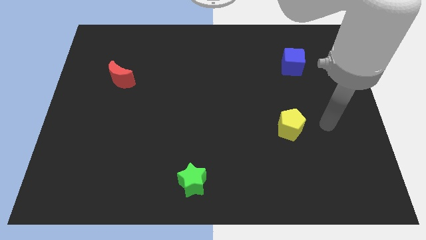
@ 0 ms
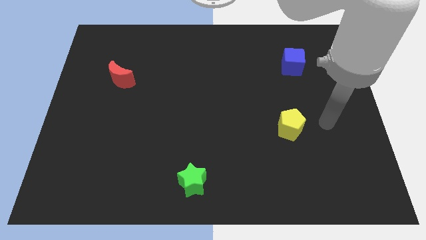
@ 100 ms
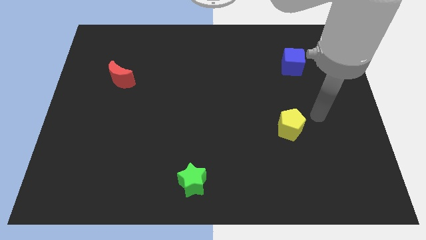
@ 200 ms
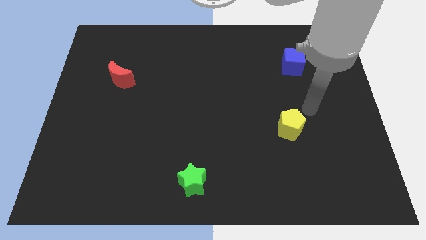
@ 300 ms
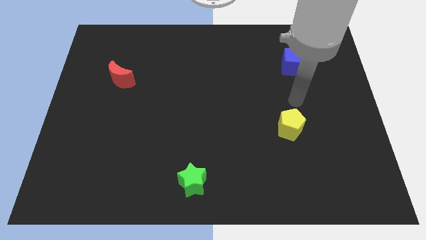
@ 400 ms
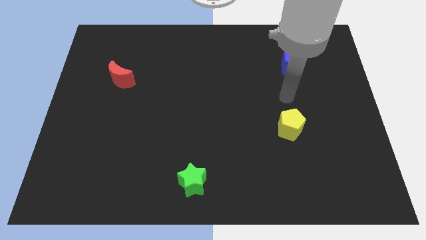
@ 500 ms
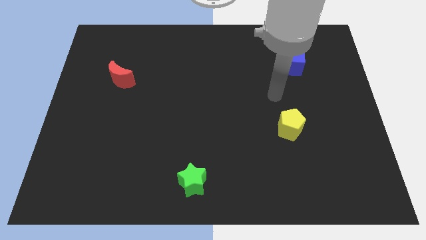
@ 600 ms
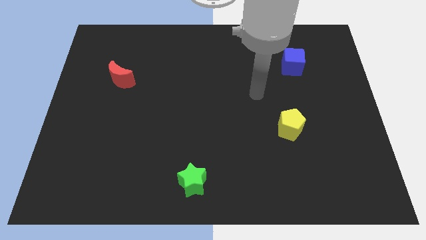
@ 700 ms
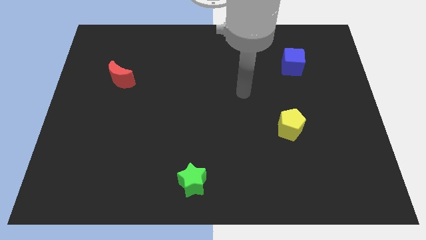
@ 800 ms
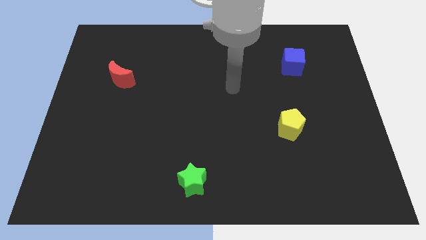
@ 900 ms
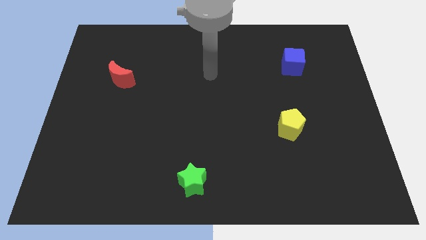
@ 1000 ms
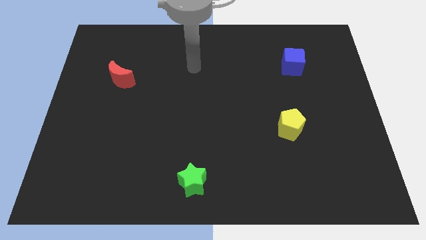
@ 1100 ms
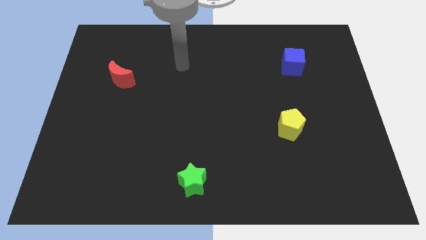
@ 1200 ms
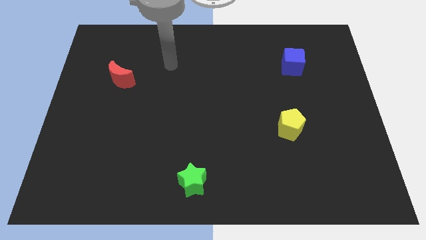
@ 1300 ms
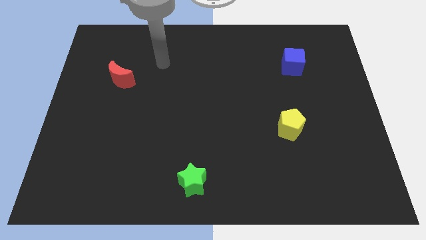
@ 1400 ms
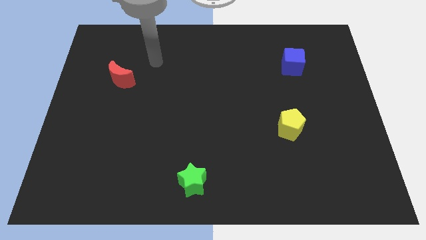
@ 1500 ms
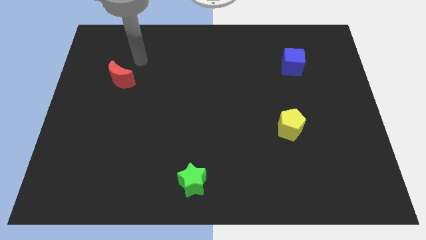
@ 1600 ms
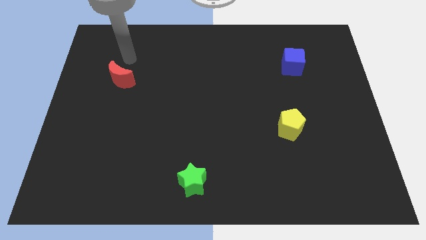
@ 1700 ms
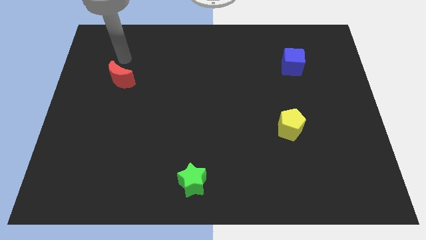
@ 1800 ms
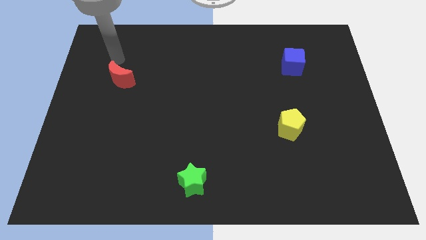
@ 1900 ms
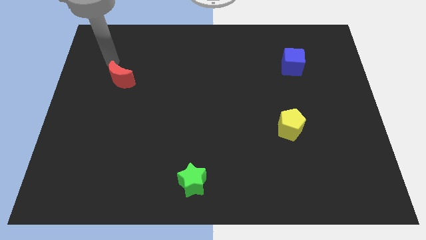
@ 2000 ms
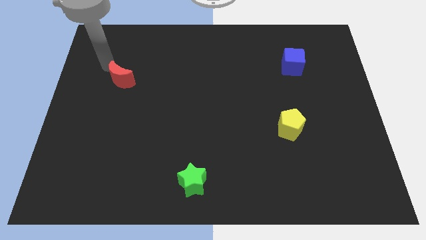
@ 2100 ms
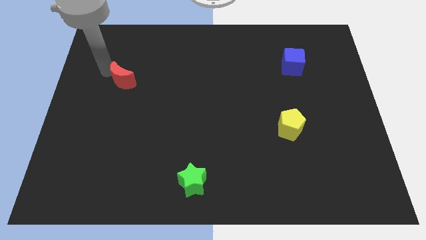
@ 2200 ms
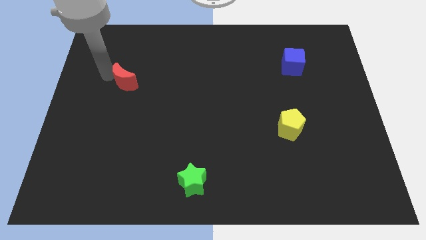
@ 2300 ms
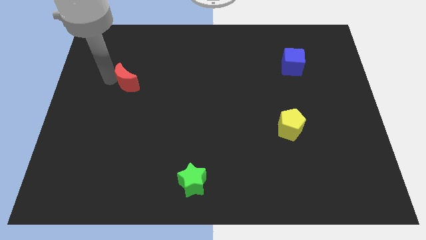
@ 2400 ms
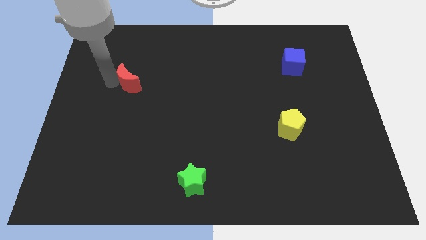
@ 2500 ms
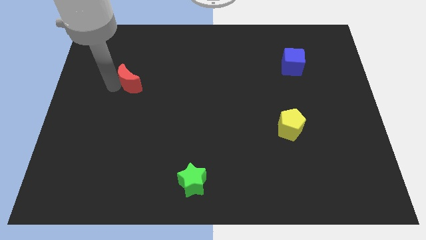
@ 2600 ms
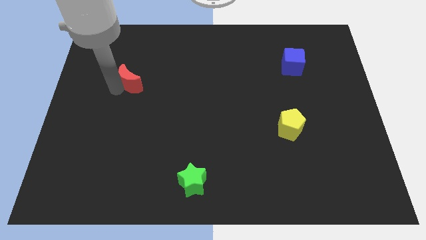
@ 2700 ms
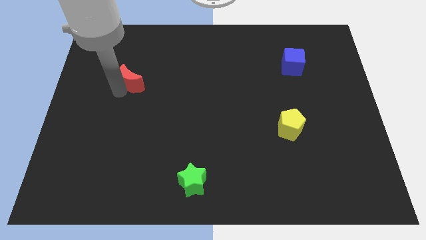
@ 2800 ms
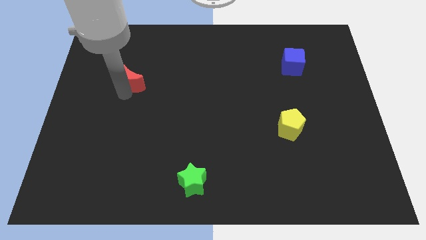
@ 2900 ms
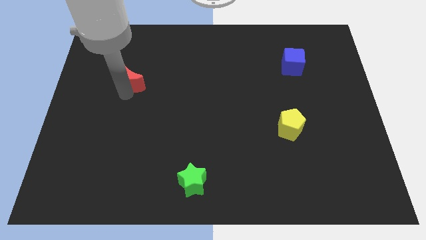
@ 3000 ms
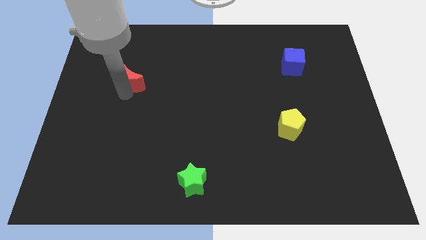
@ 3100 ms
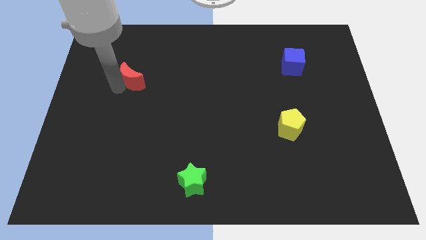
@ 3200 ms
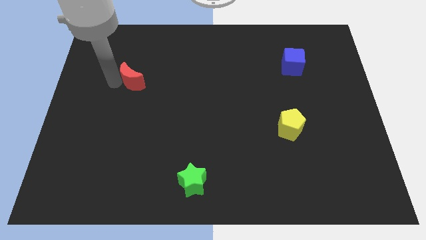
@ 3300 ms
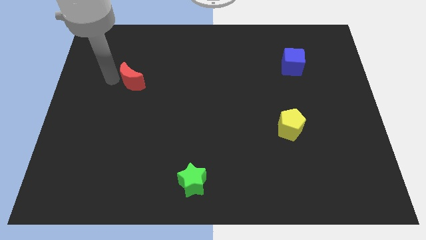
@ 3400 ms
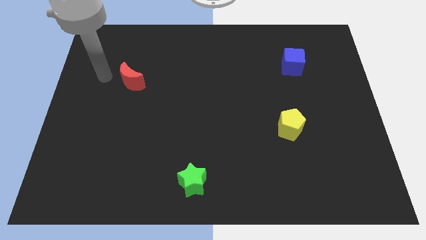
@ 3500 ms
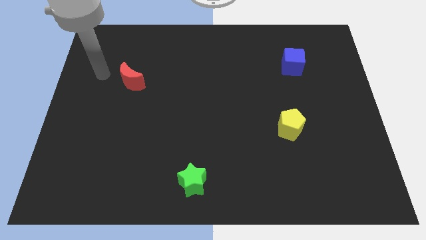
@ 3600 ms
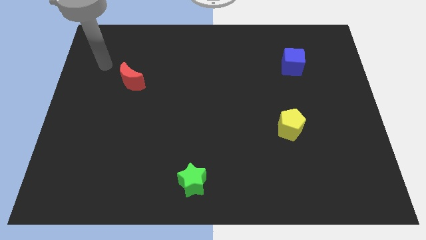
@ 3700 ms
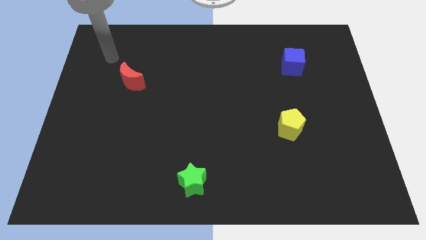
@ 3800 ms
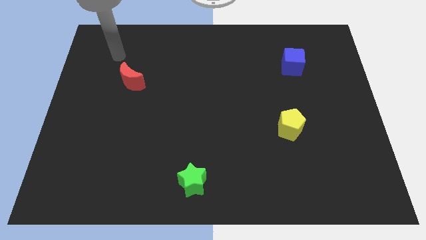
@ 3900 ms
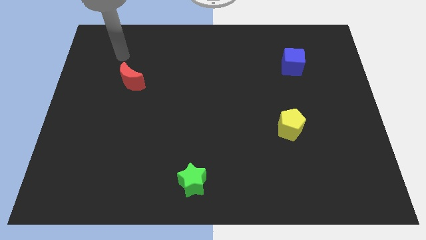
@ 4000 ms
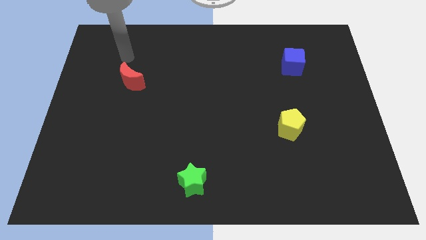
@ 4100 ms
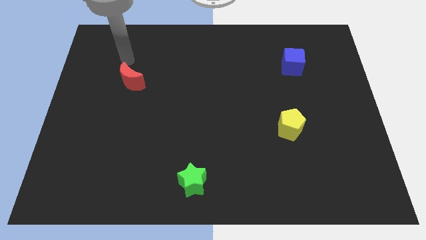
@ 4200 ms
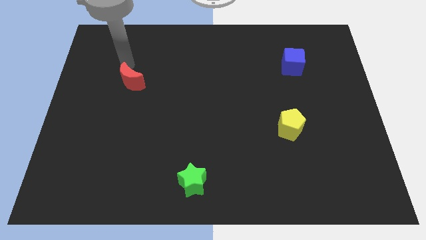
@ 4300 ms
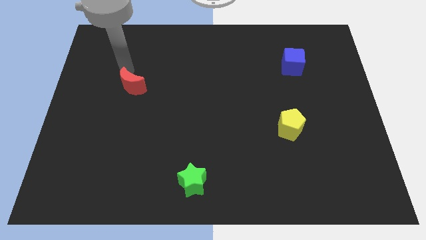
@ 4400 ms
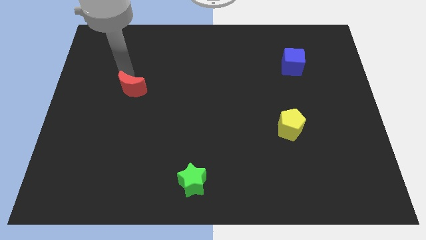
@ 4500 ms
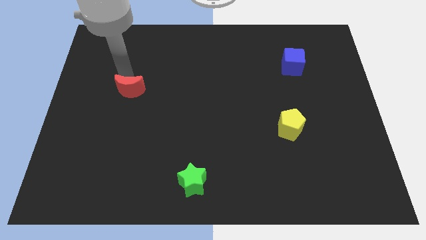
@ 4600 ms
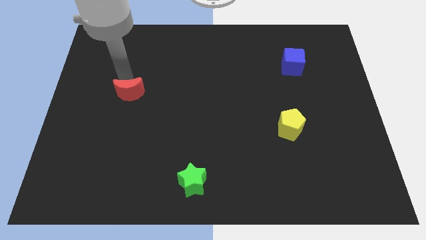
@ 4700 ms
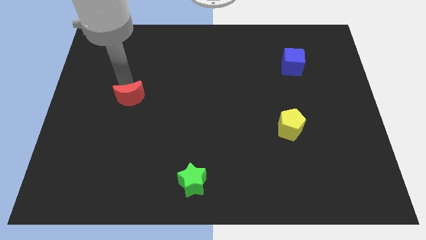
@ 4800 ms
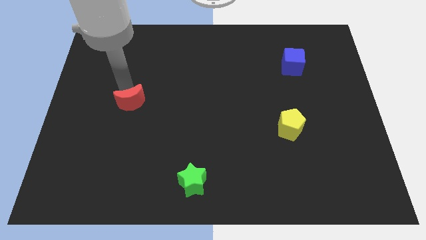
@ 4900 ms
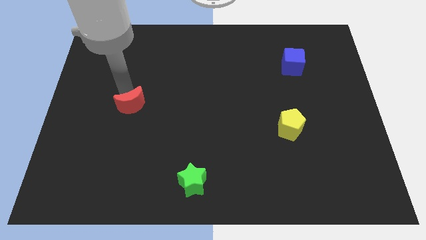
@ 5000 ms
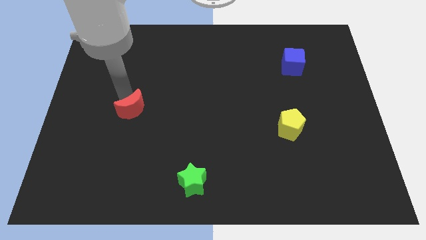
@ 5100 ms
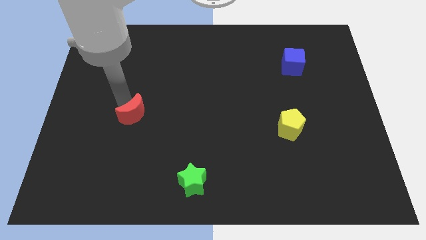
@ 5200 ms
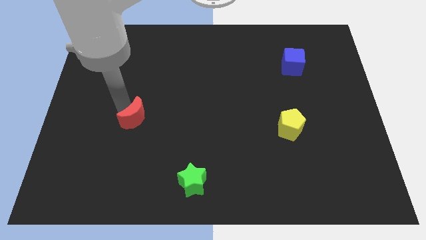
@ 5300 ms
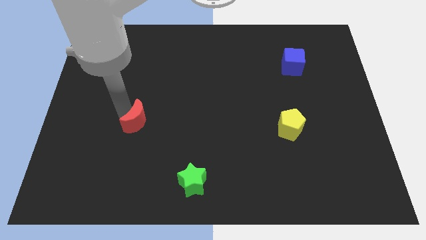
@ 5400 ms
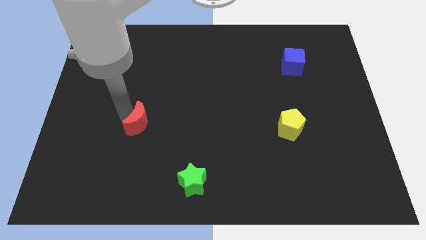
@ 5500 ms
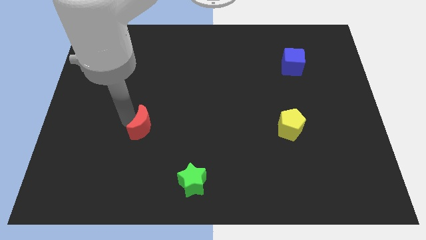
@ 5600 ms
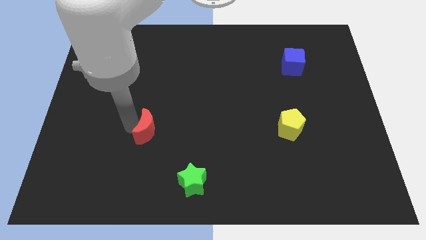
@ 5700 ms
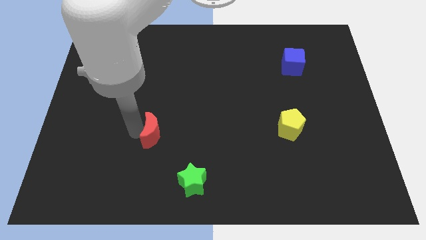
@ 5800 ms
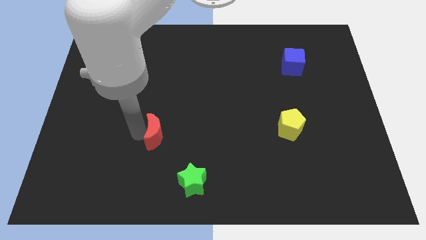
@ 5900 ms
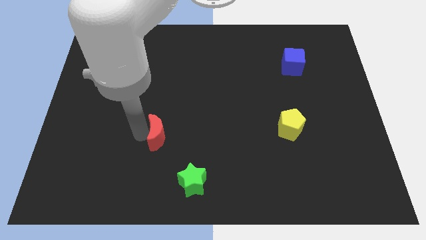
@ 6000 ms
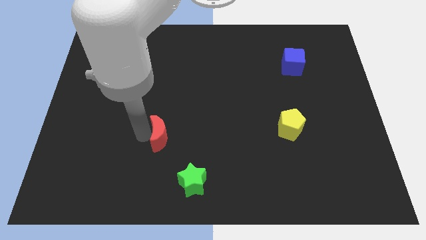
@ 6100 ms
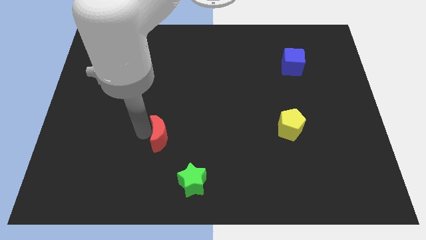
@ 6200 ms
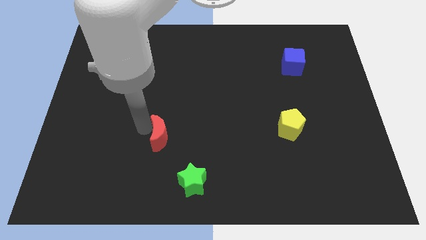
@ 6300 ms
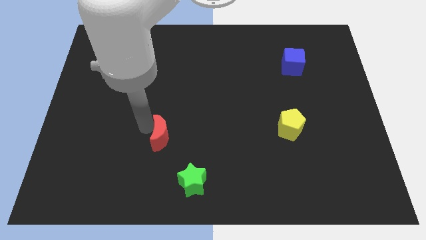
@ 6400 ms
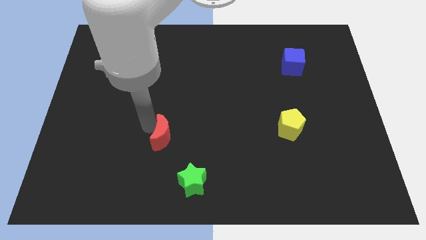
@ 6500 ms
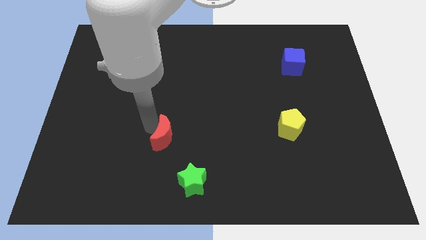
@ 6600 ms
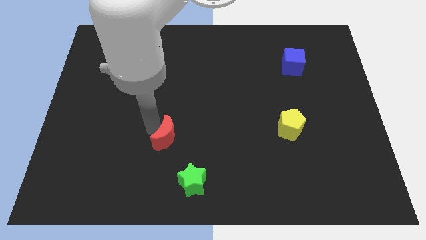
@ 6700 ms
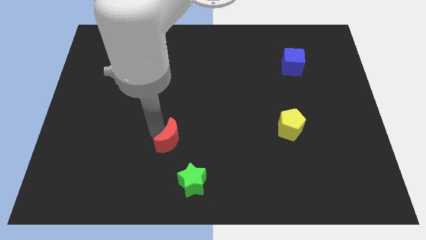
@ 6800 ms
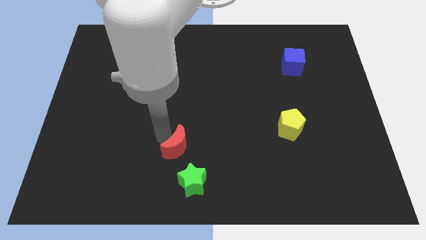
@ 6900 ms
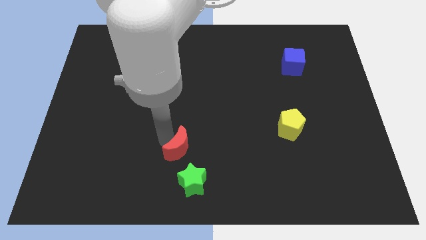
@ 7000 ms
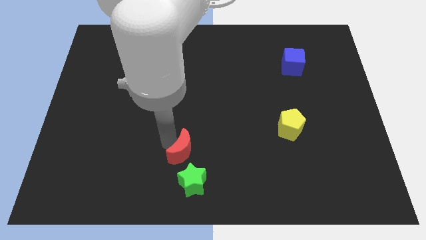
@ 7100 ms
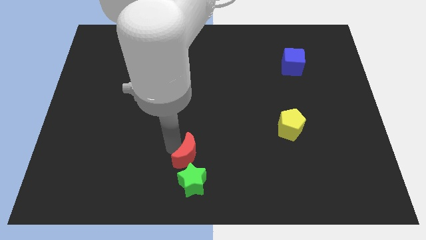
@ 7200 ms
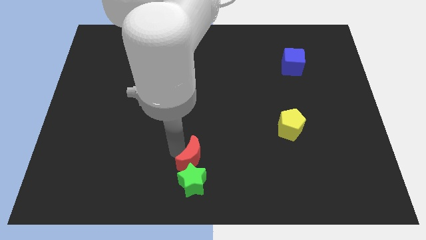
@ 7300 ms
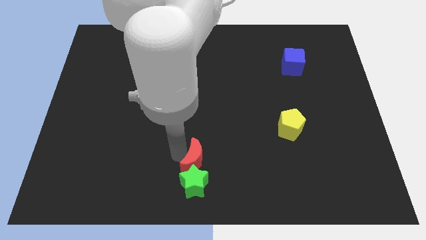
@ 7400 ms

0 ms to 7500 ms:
slide the red block towards the green star

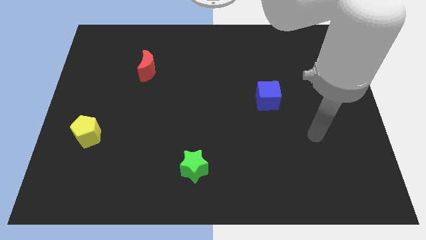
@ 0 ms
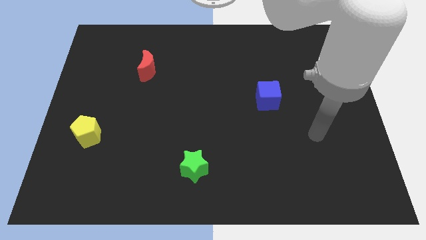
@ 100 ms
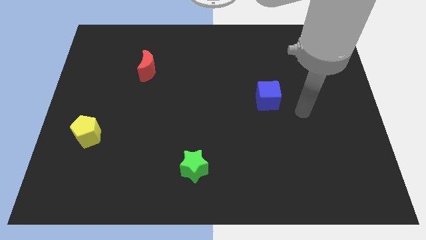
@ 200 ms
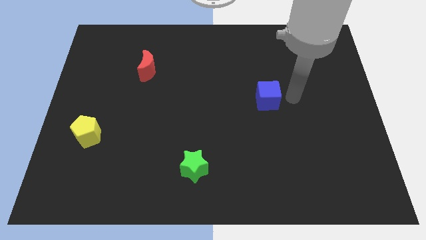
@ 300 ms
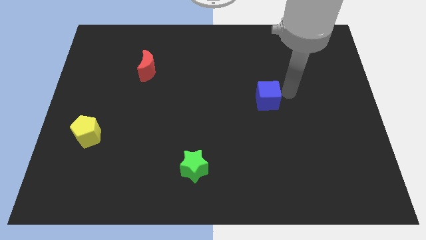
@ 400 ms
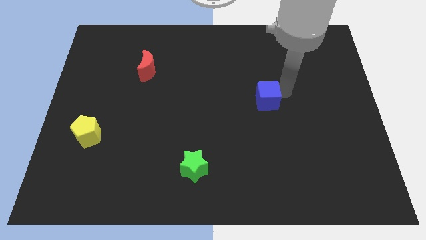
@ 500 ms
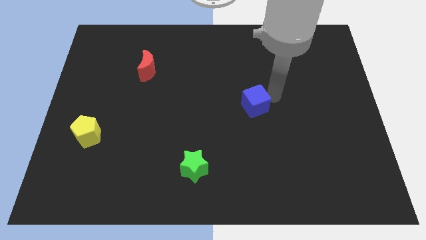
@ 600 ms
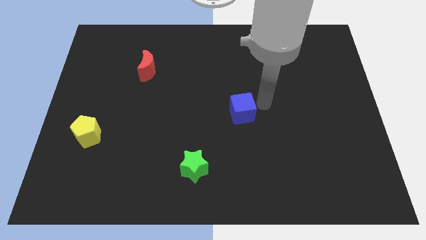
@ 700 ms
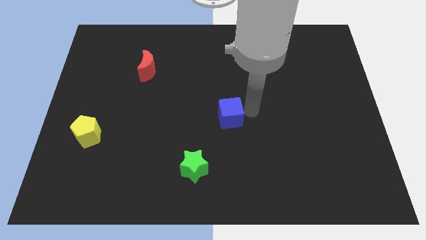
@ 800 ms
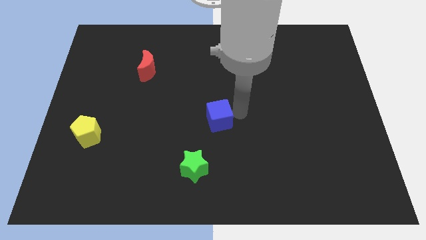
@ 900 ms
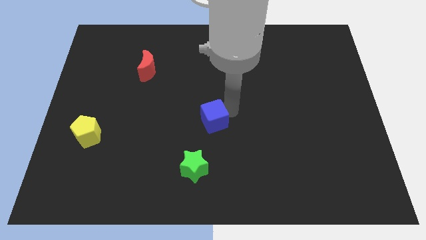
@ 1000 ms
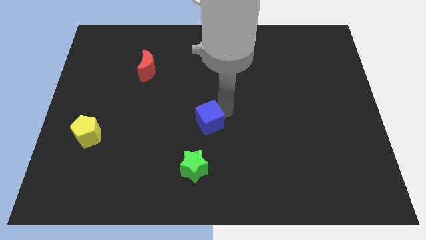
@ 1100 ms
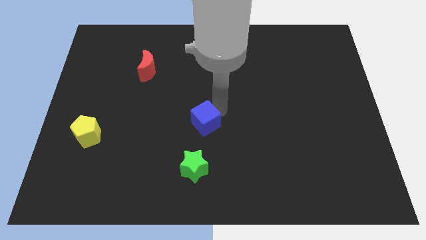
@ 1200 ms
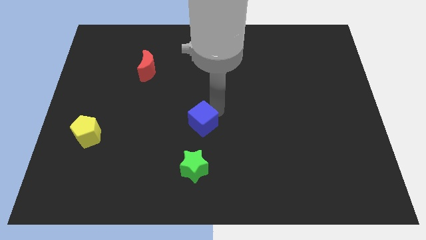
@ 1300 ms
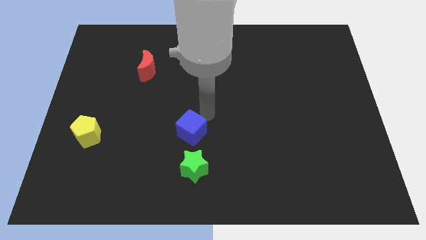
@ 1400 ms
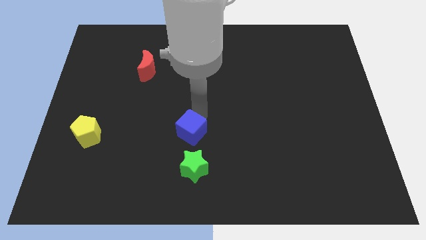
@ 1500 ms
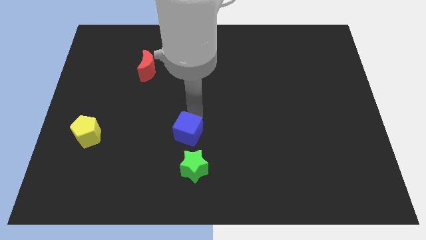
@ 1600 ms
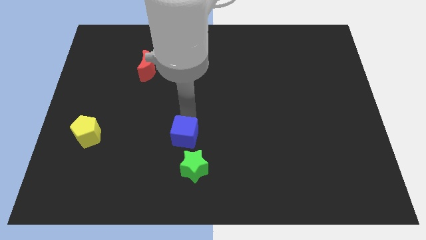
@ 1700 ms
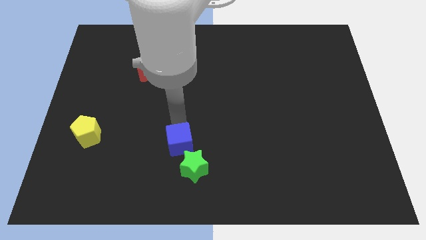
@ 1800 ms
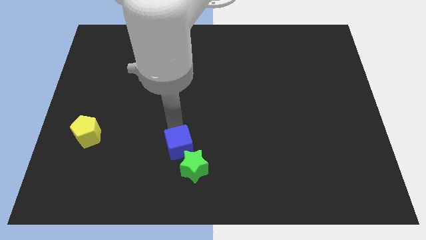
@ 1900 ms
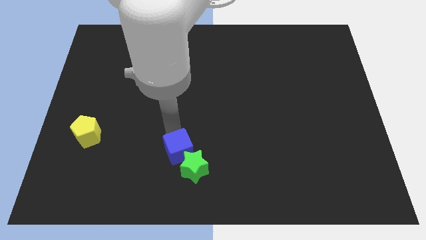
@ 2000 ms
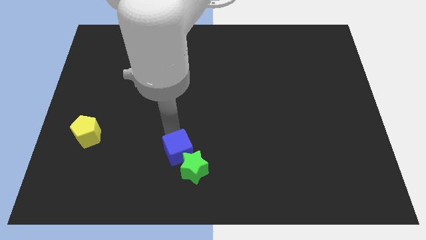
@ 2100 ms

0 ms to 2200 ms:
slide the blue cube next to the green block
